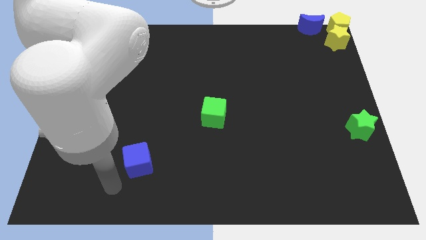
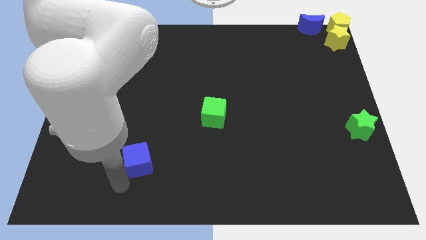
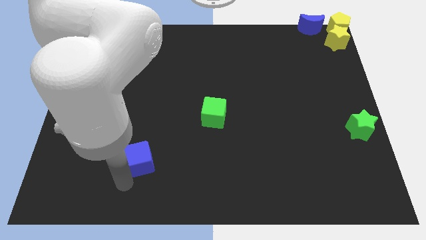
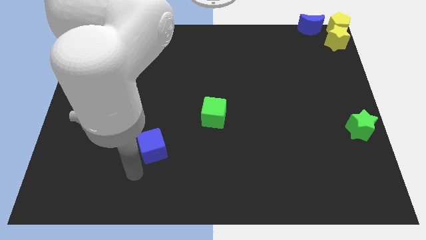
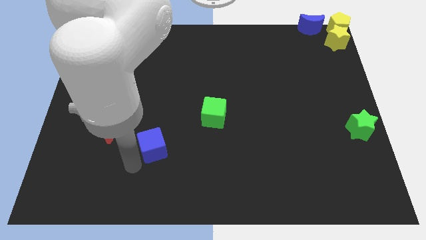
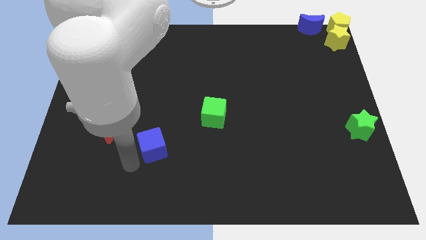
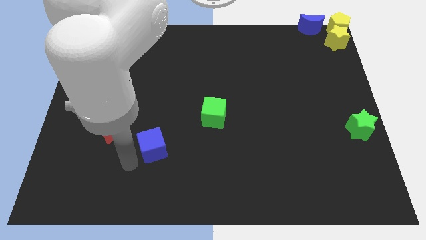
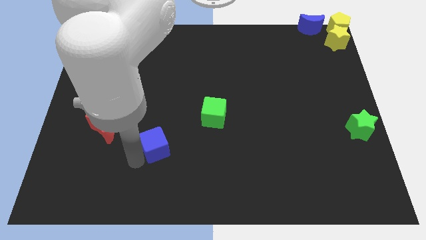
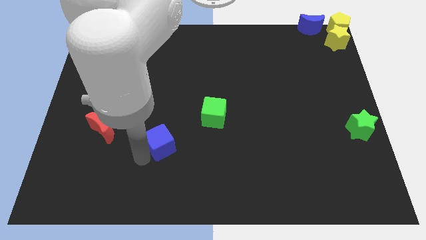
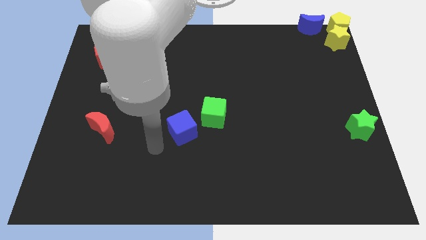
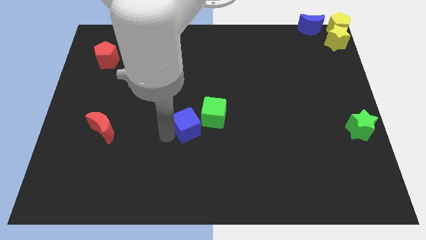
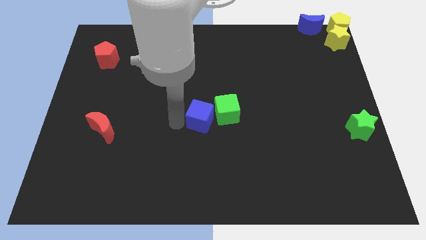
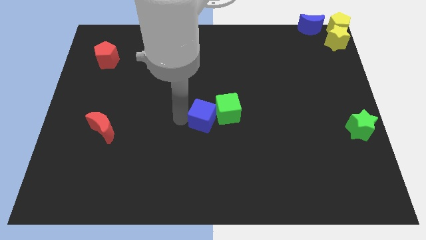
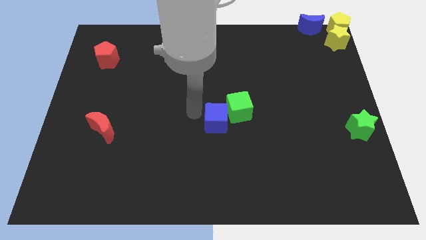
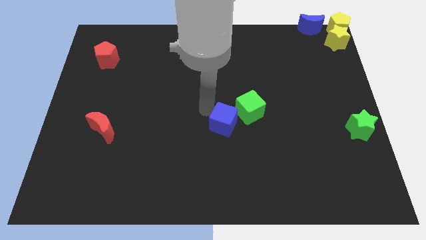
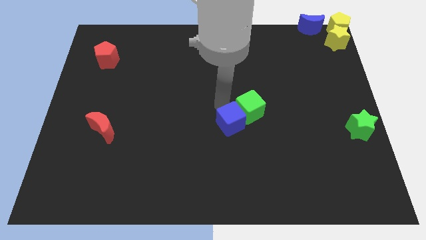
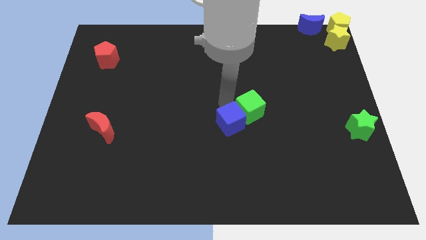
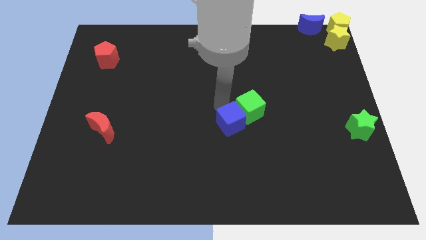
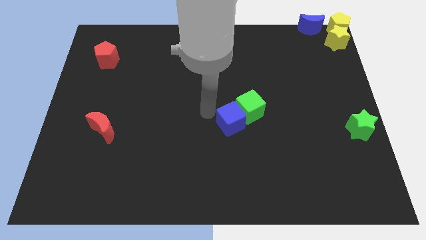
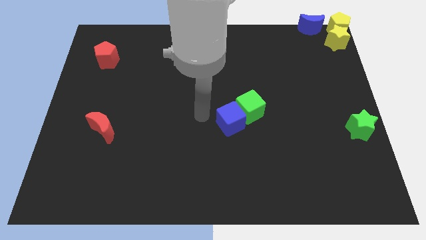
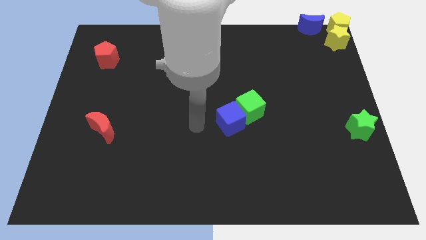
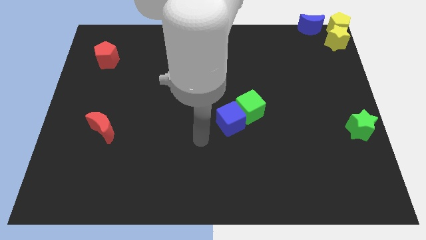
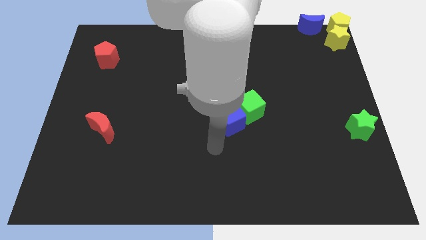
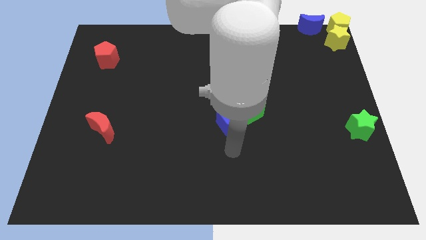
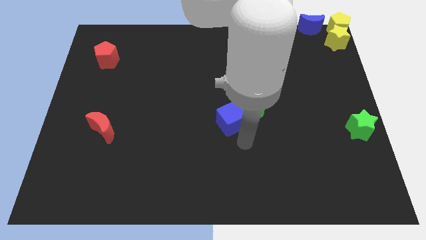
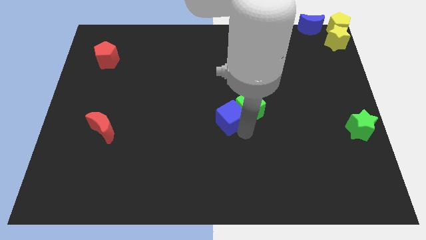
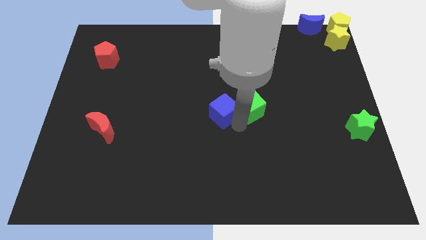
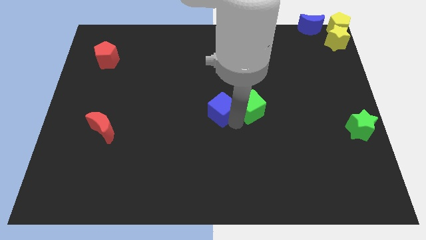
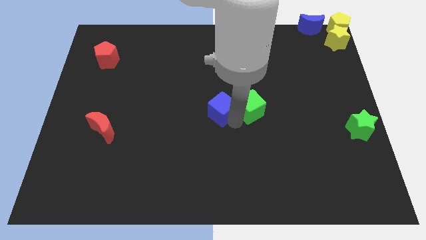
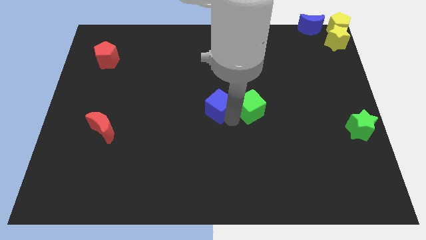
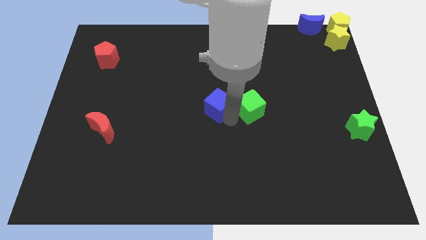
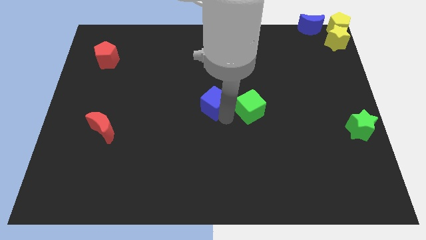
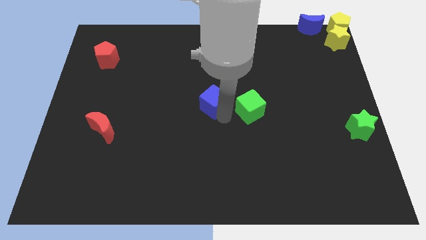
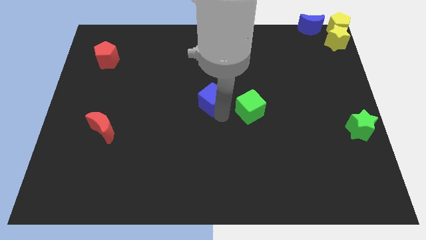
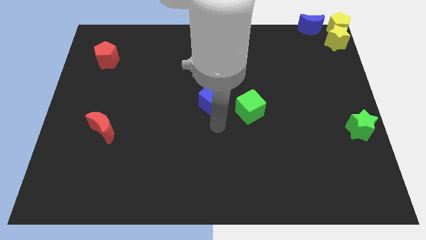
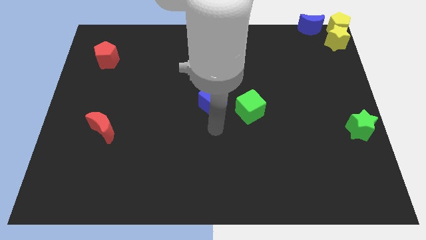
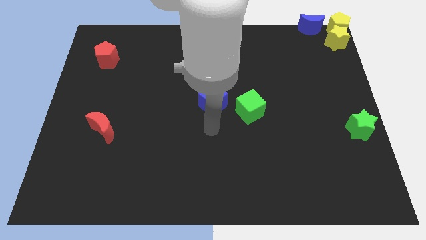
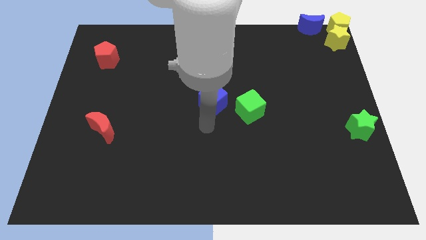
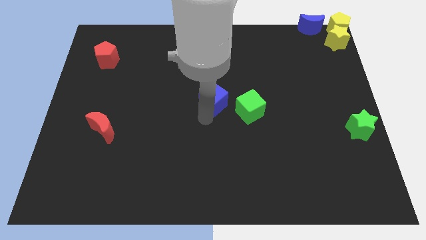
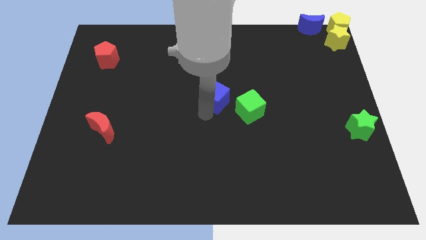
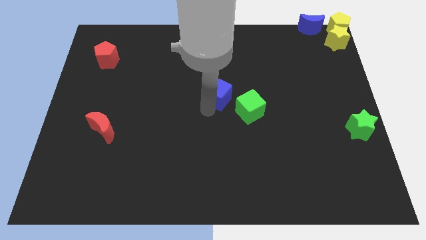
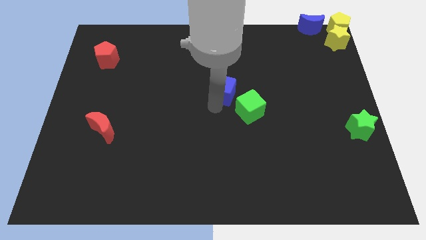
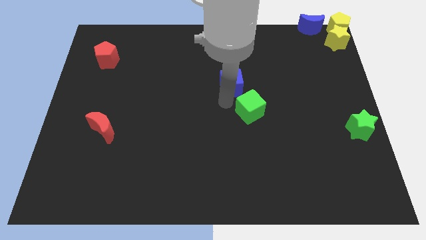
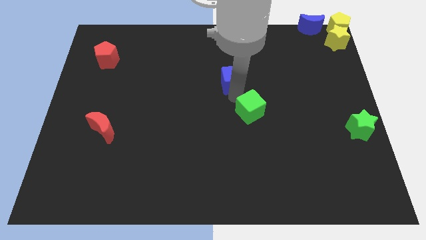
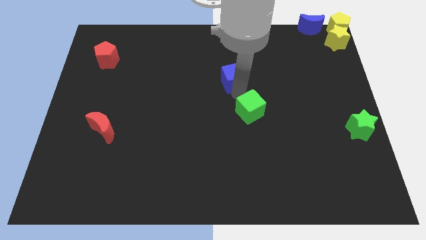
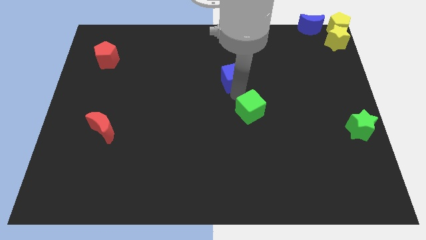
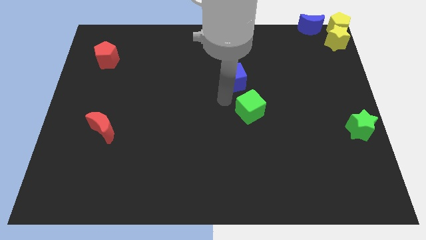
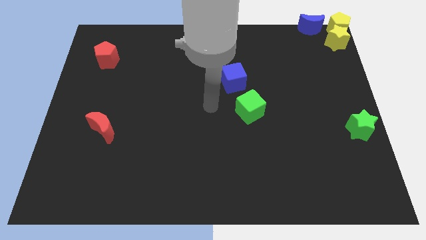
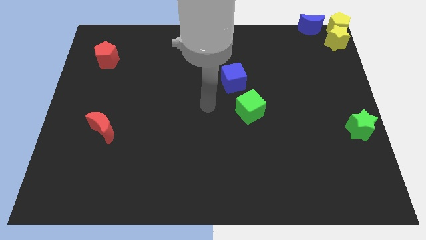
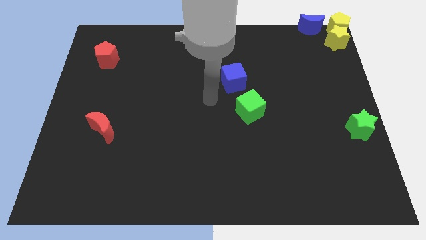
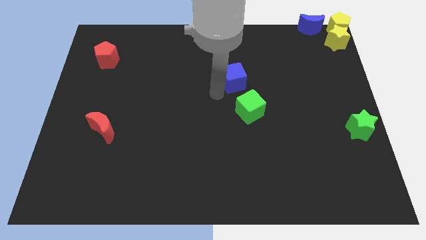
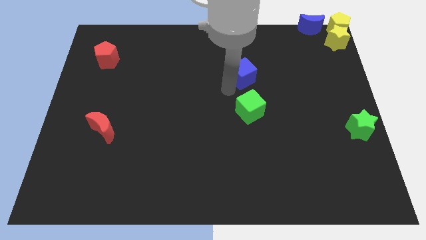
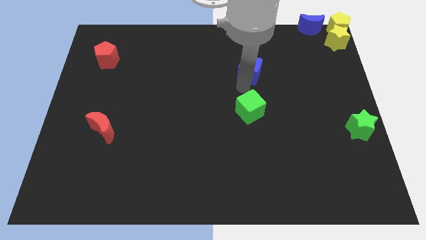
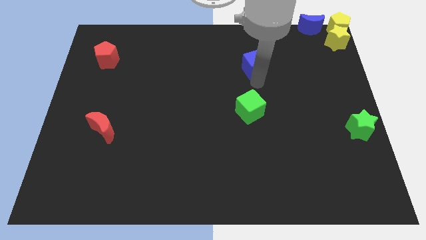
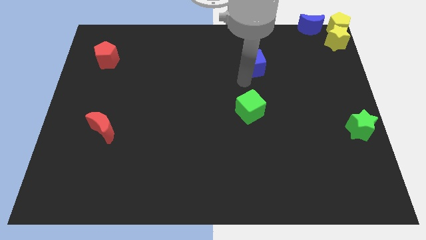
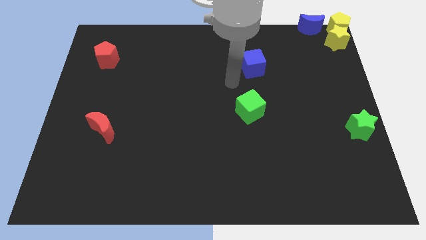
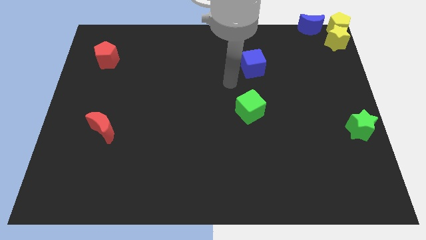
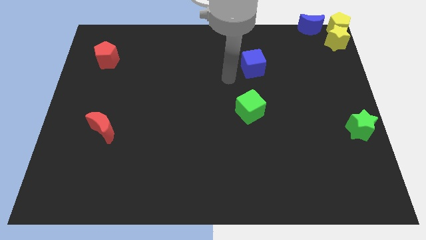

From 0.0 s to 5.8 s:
place the blue cube above the green cube

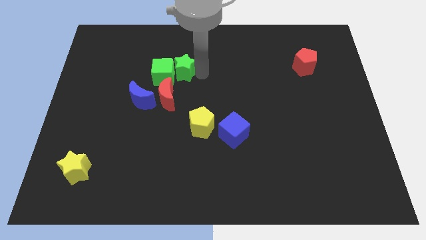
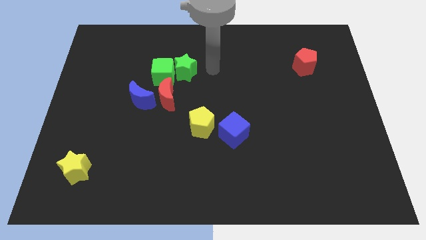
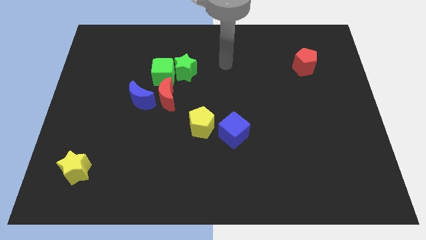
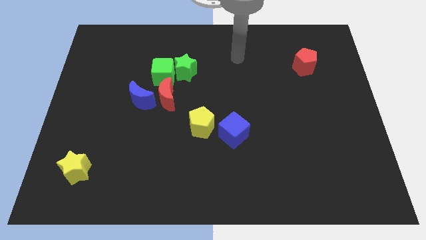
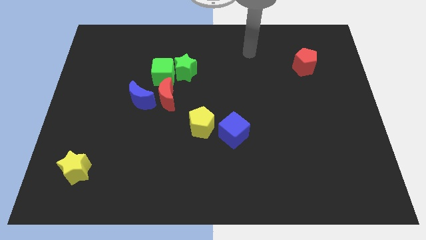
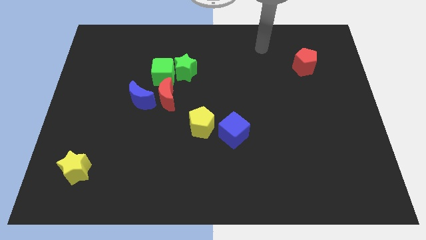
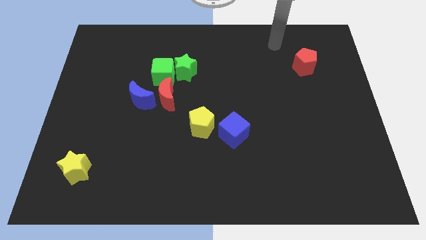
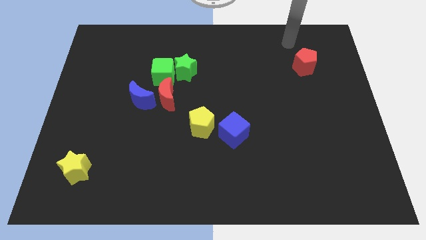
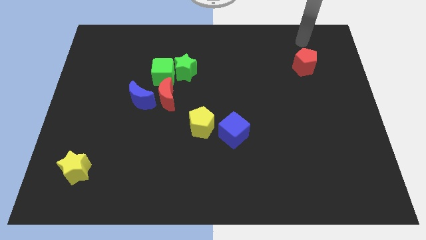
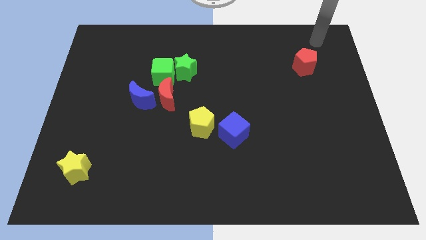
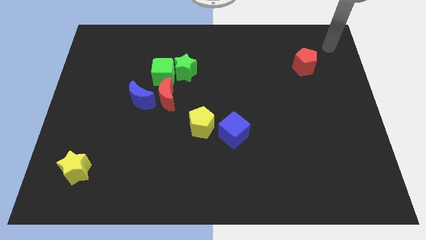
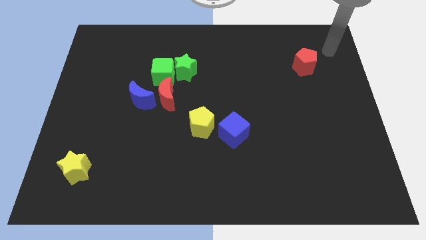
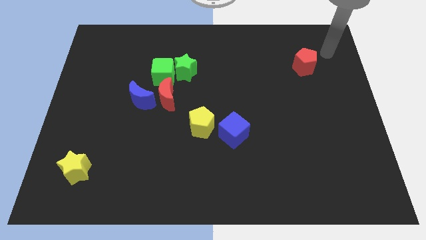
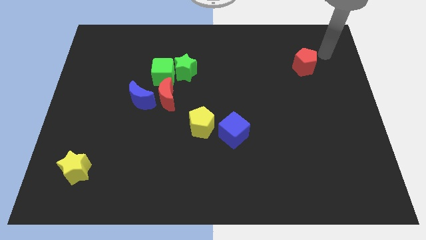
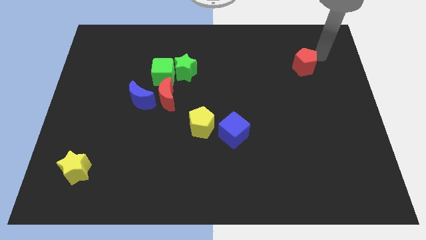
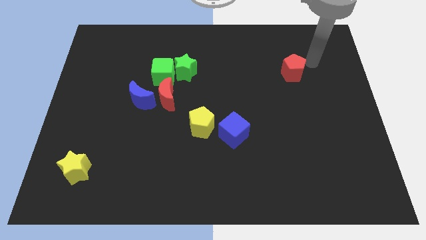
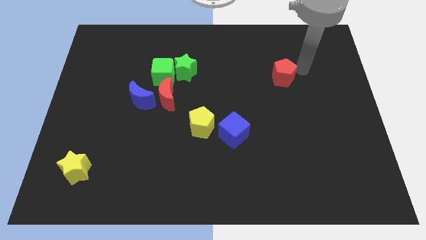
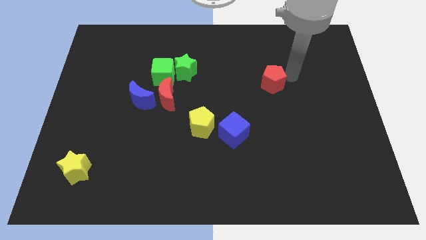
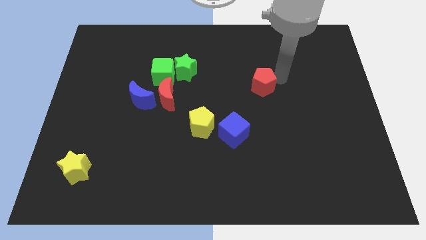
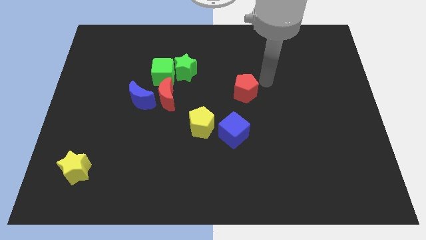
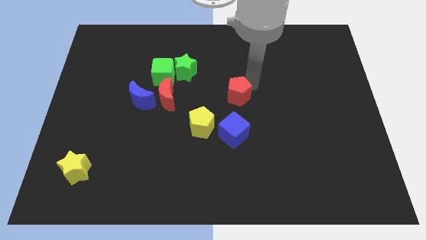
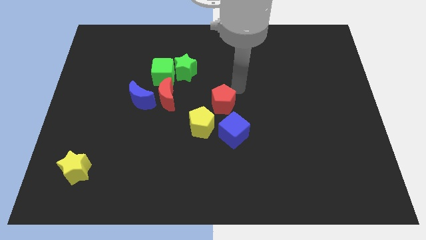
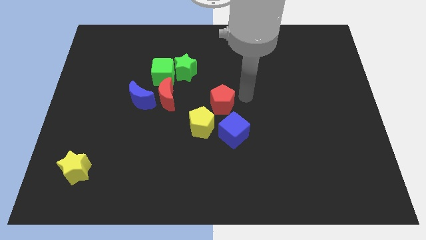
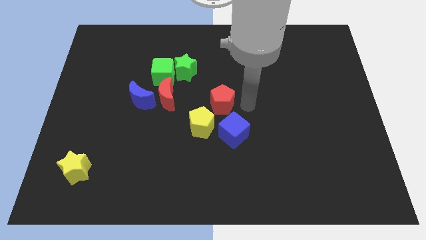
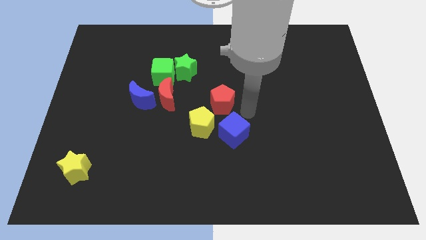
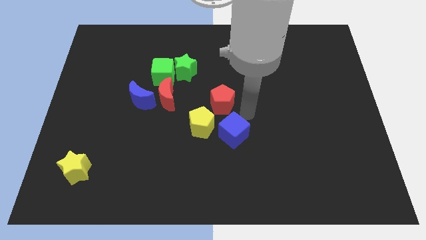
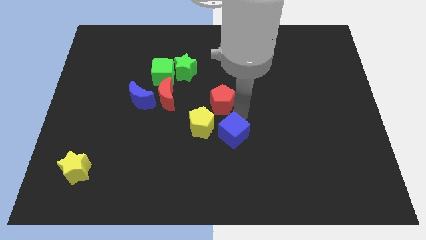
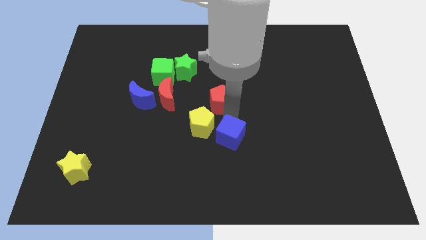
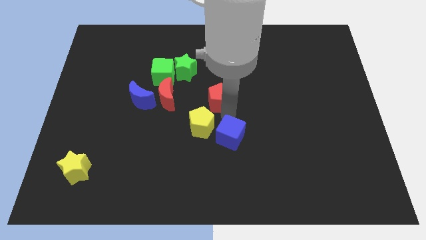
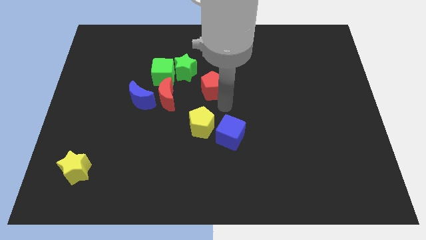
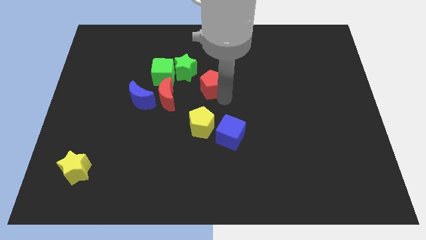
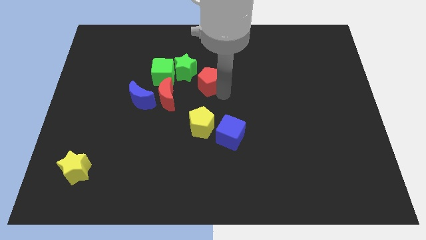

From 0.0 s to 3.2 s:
move red pentagon towards the green star
